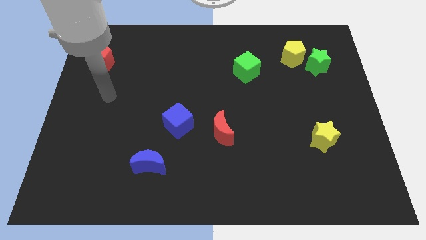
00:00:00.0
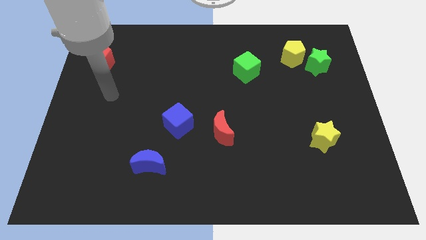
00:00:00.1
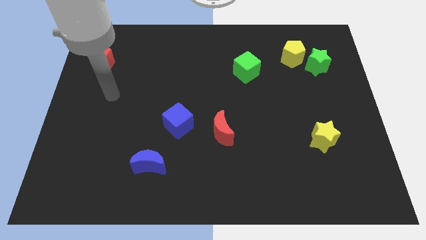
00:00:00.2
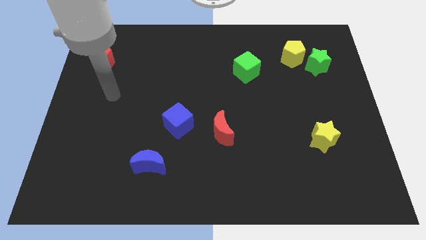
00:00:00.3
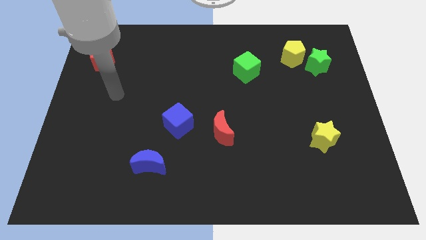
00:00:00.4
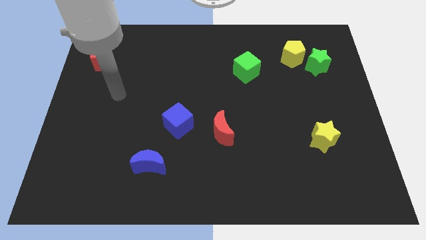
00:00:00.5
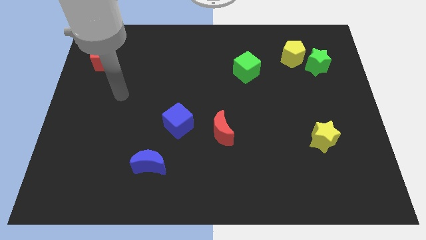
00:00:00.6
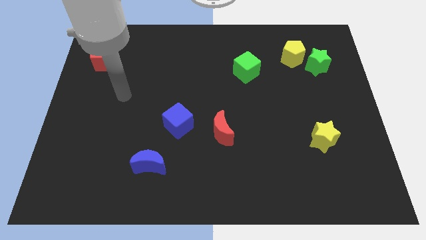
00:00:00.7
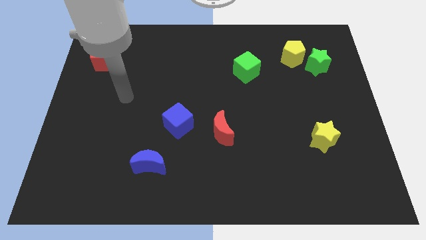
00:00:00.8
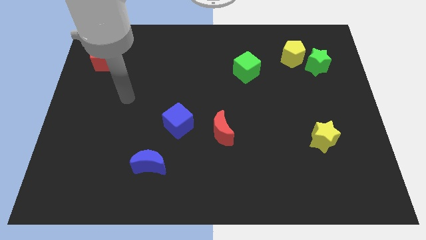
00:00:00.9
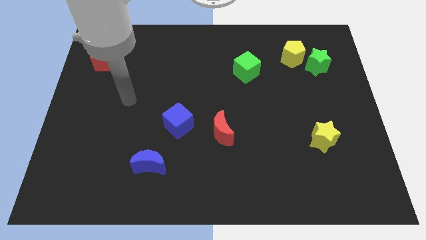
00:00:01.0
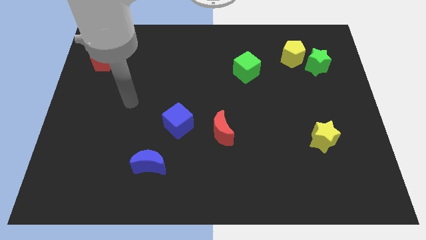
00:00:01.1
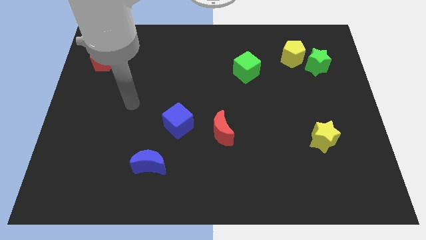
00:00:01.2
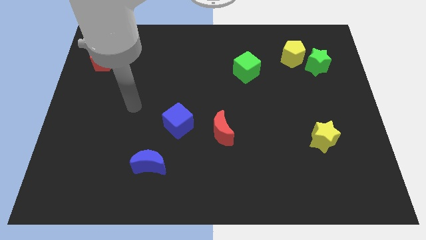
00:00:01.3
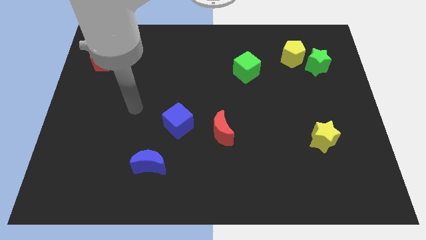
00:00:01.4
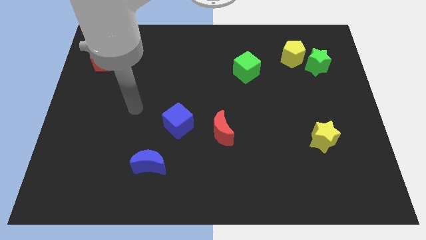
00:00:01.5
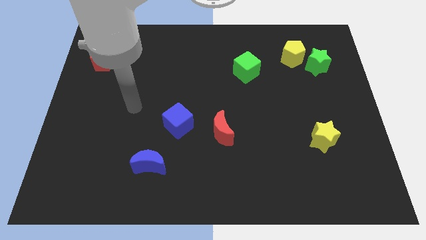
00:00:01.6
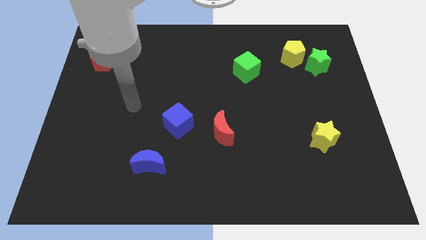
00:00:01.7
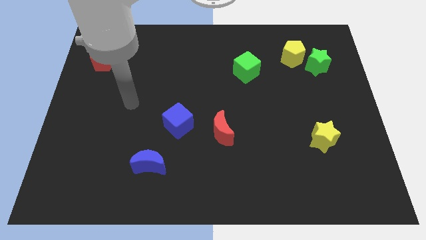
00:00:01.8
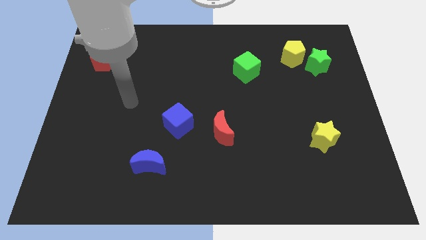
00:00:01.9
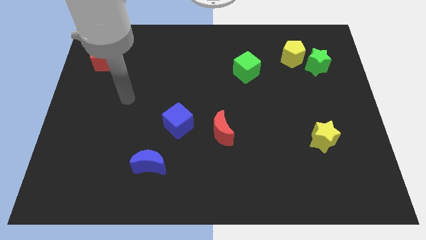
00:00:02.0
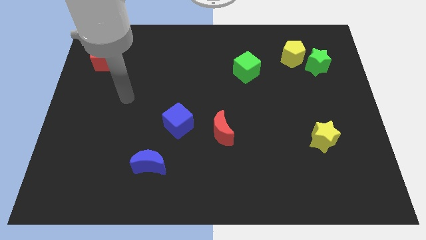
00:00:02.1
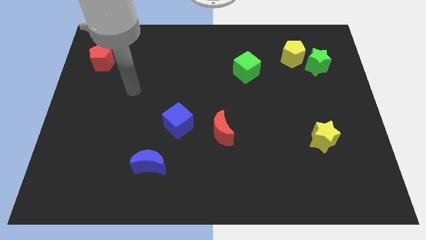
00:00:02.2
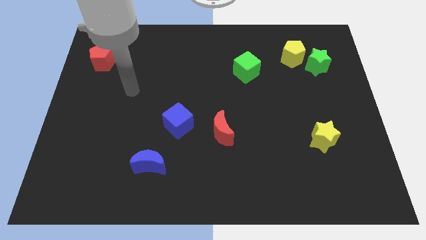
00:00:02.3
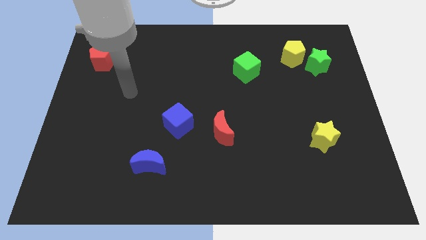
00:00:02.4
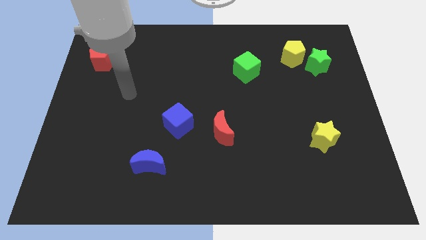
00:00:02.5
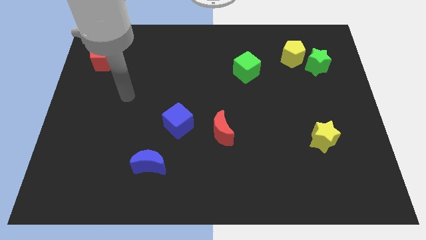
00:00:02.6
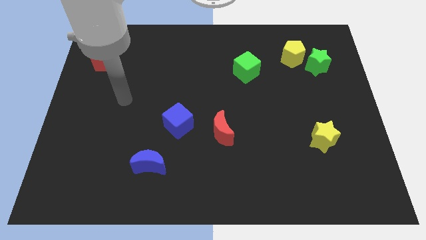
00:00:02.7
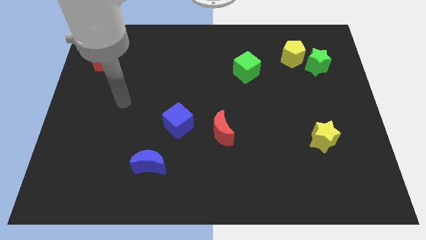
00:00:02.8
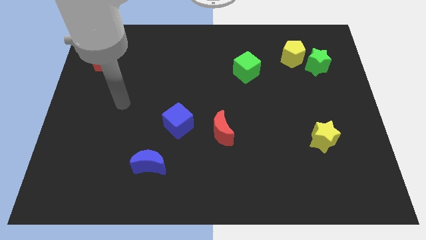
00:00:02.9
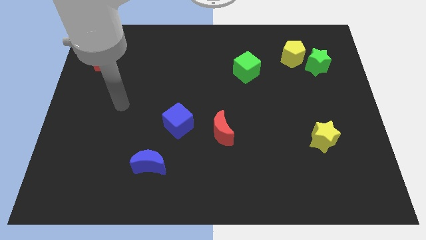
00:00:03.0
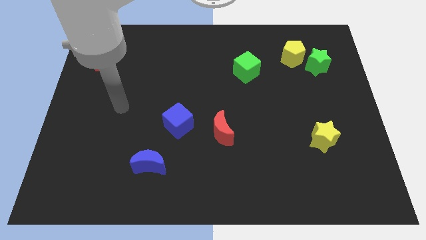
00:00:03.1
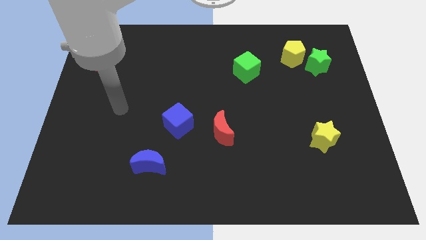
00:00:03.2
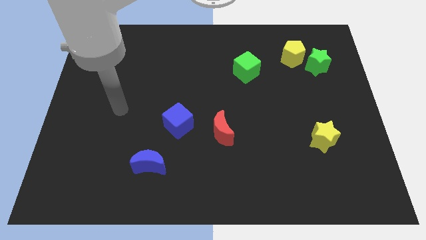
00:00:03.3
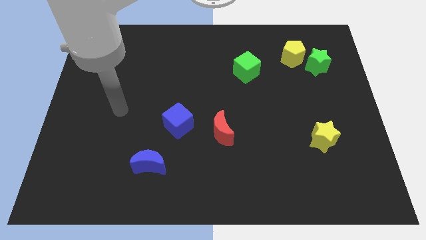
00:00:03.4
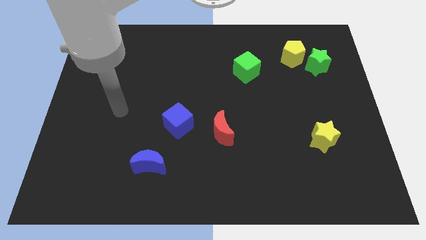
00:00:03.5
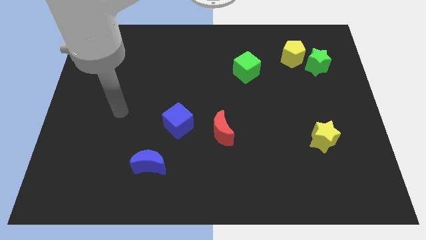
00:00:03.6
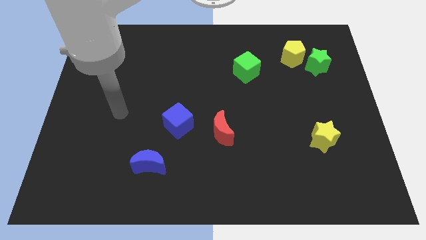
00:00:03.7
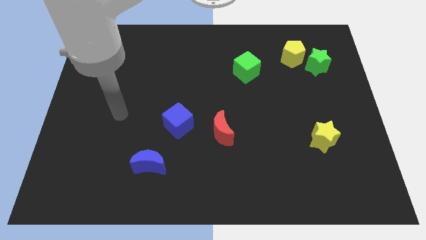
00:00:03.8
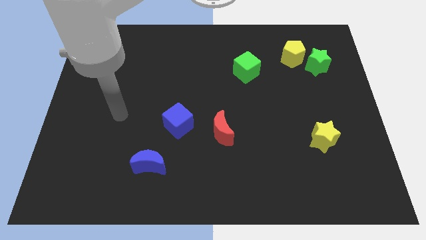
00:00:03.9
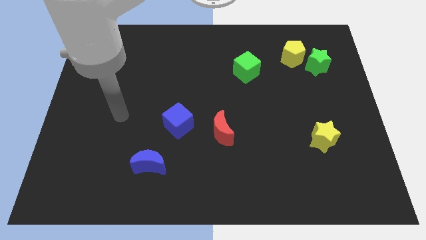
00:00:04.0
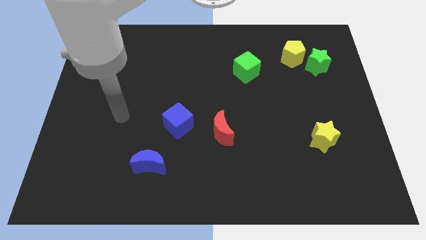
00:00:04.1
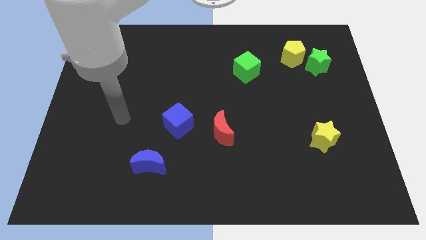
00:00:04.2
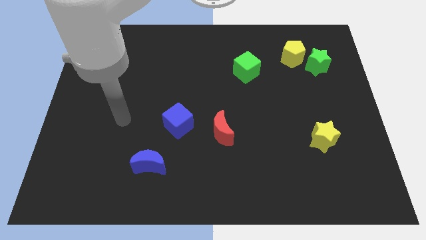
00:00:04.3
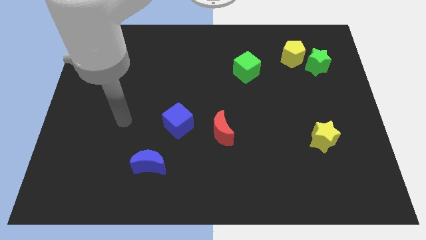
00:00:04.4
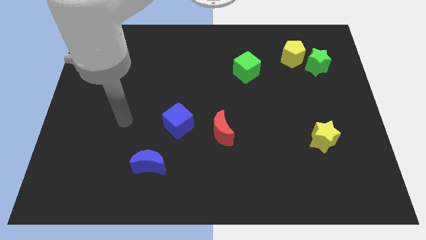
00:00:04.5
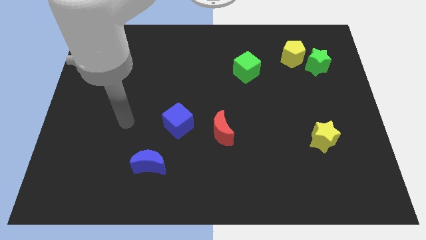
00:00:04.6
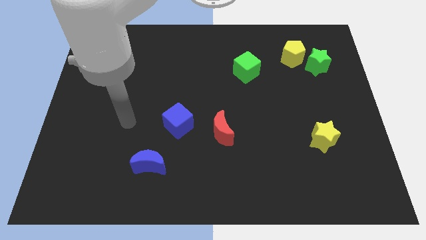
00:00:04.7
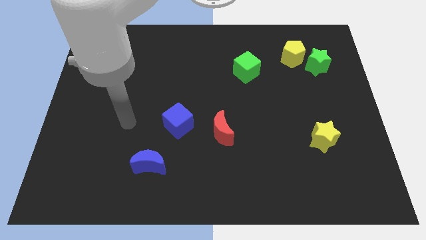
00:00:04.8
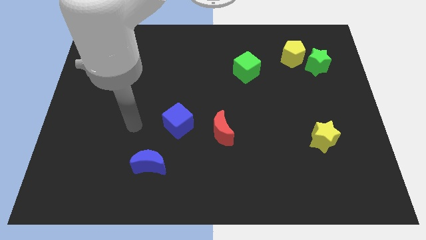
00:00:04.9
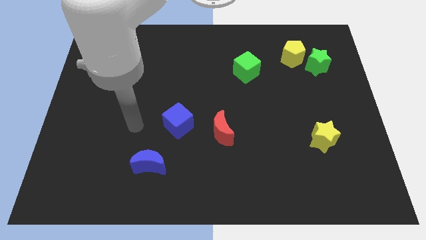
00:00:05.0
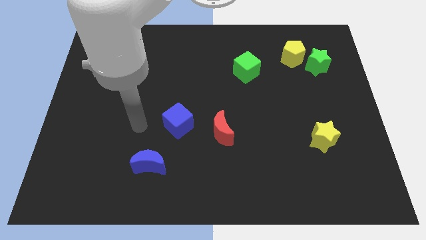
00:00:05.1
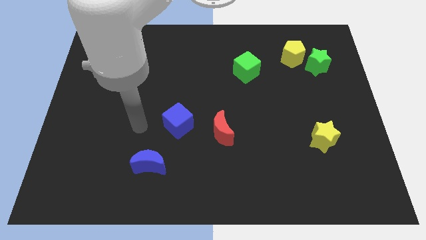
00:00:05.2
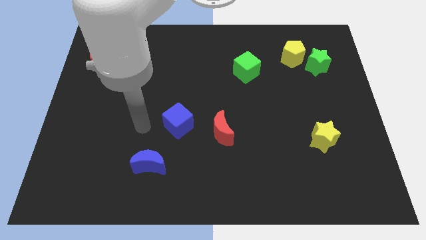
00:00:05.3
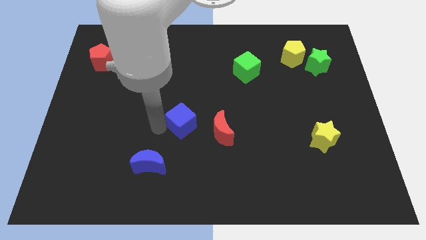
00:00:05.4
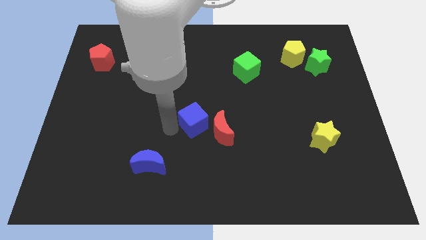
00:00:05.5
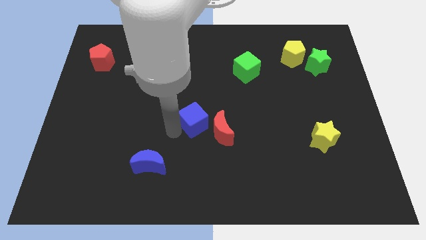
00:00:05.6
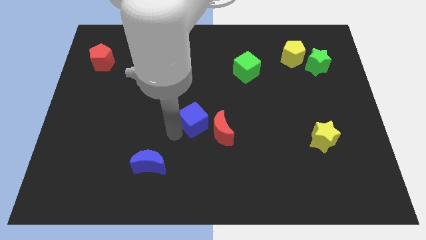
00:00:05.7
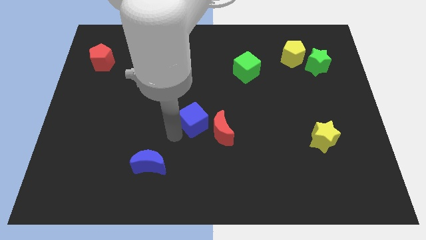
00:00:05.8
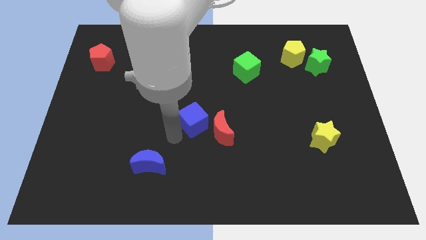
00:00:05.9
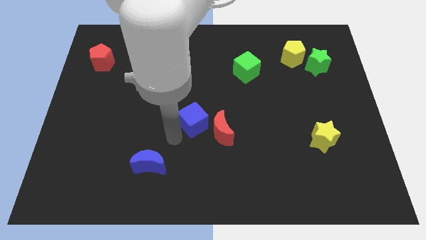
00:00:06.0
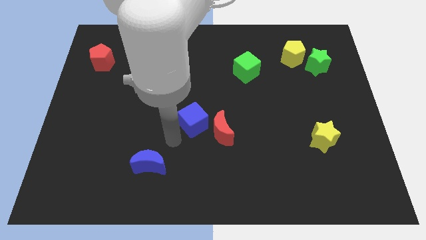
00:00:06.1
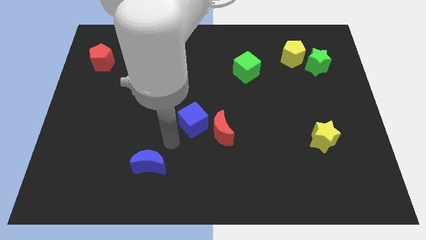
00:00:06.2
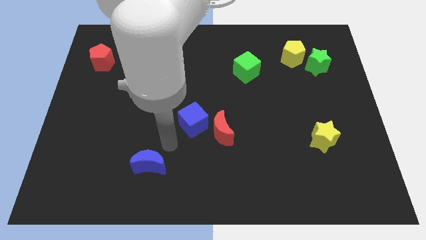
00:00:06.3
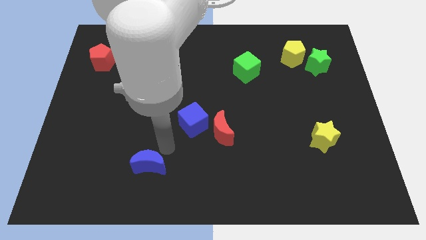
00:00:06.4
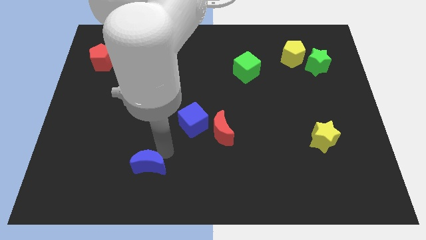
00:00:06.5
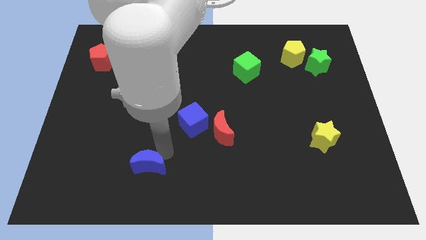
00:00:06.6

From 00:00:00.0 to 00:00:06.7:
move your arm towards the blue crescent

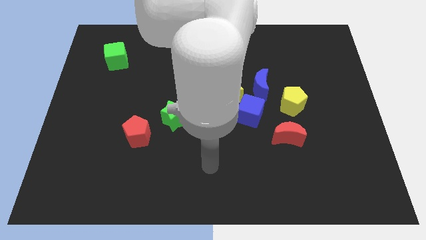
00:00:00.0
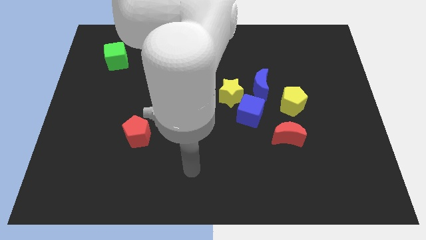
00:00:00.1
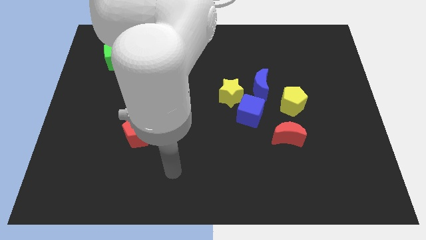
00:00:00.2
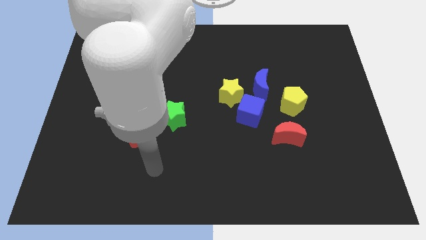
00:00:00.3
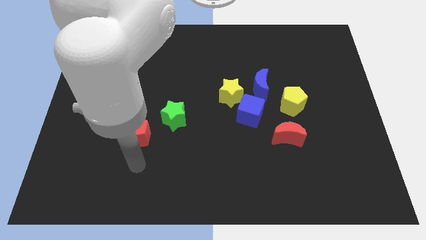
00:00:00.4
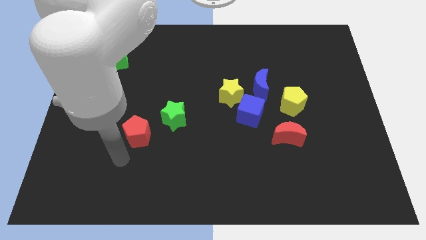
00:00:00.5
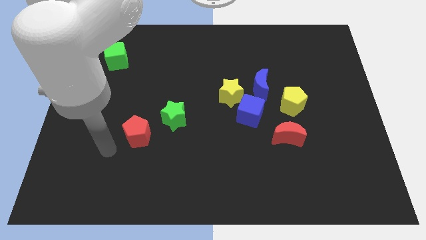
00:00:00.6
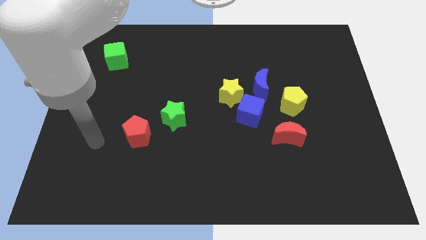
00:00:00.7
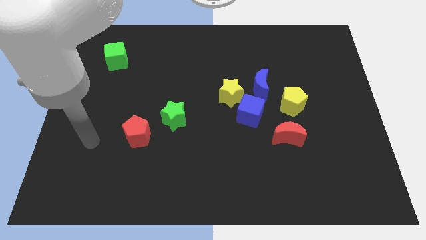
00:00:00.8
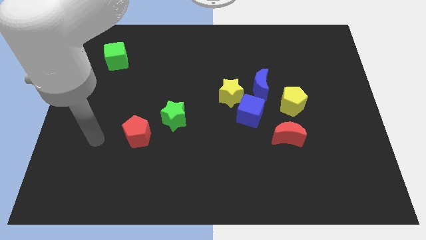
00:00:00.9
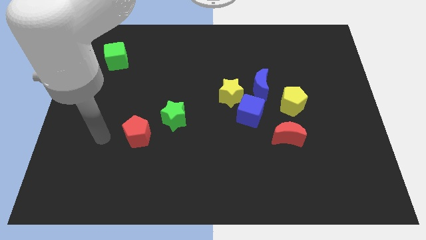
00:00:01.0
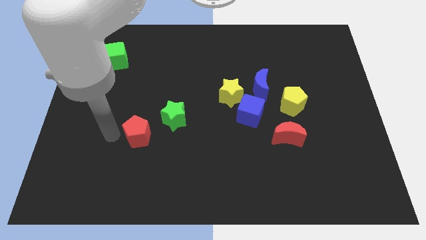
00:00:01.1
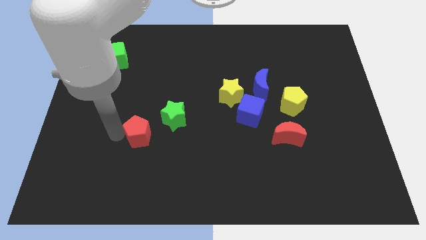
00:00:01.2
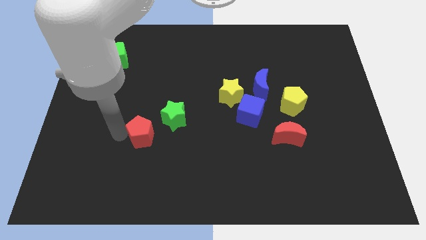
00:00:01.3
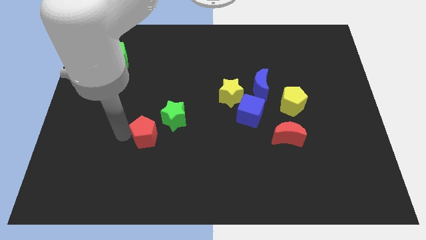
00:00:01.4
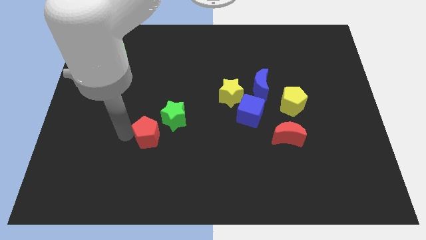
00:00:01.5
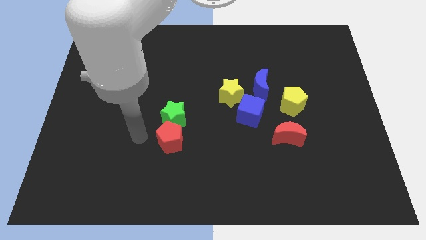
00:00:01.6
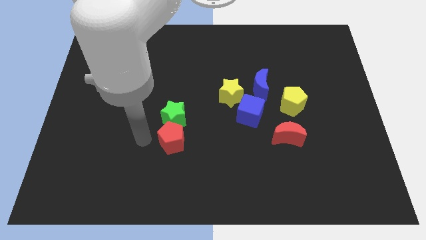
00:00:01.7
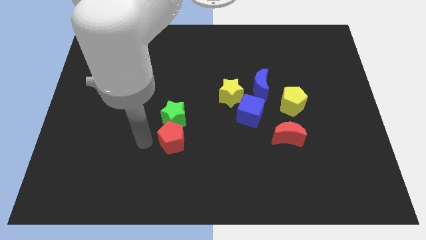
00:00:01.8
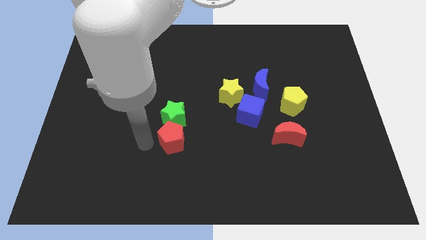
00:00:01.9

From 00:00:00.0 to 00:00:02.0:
place the red pentagon to the bottom side of the green star
